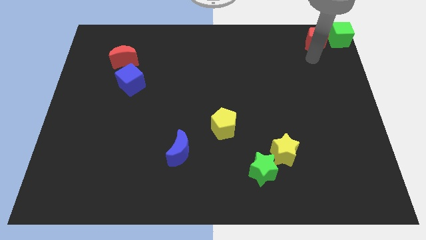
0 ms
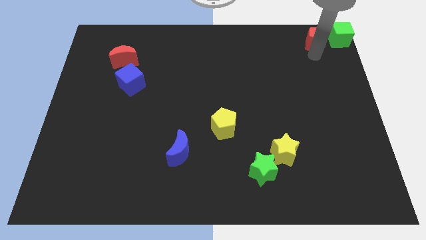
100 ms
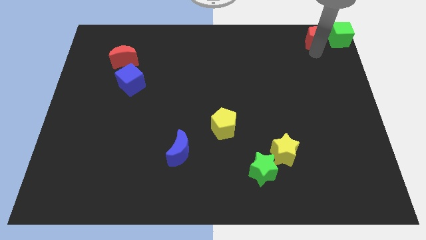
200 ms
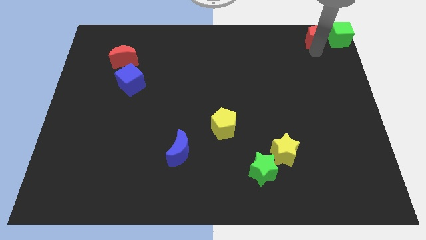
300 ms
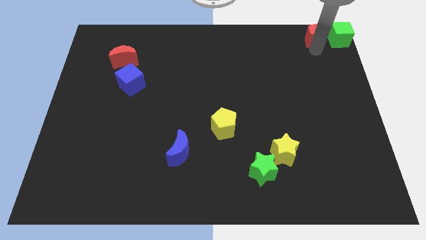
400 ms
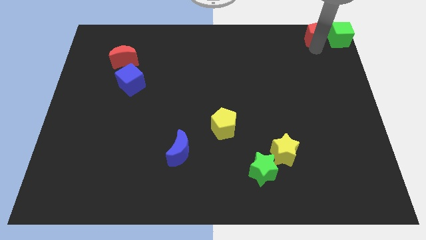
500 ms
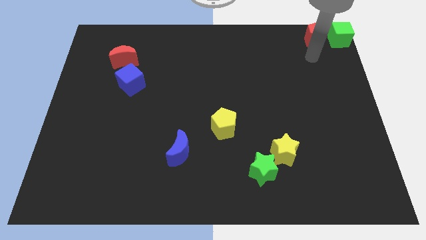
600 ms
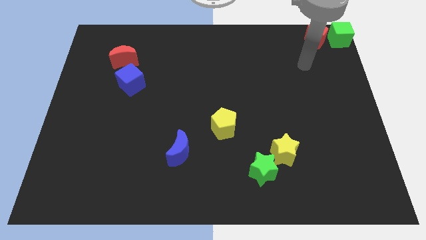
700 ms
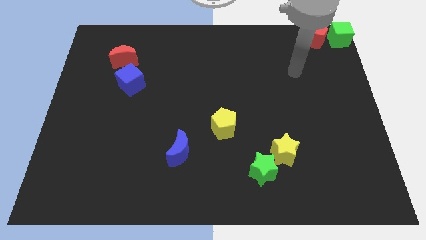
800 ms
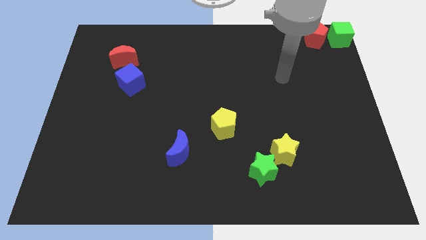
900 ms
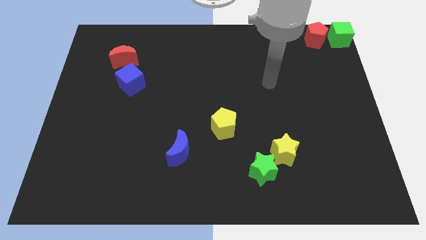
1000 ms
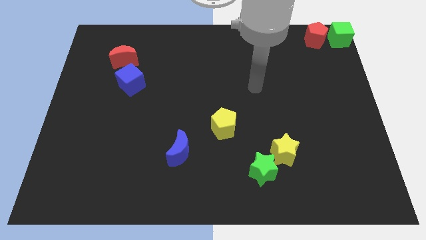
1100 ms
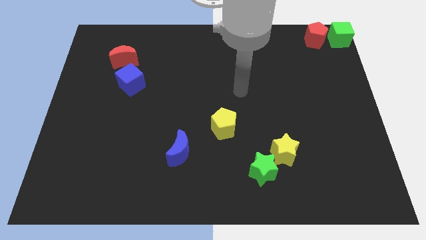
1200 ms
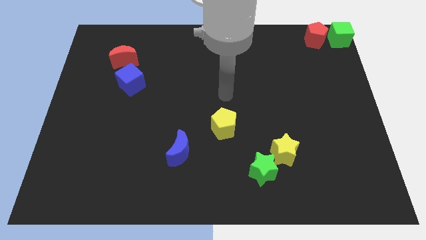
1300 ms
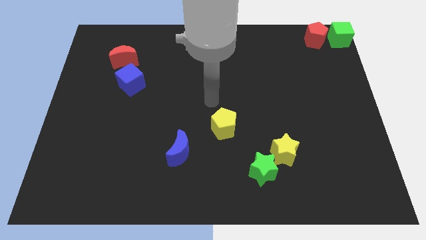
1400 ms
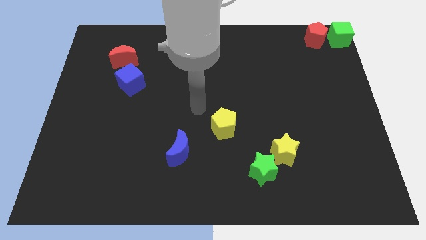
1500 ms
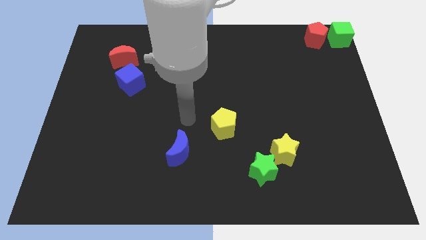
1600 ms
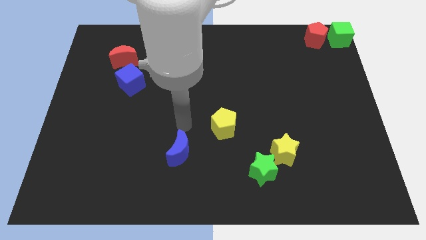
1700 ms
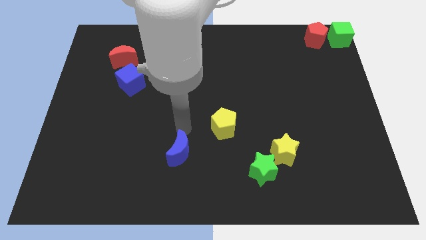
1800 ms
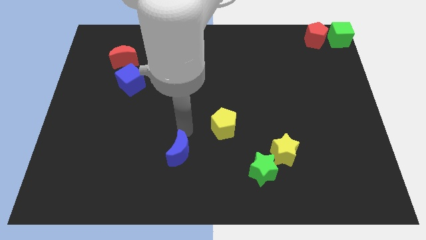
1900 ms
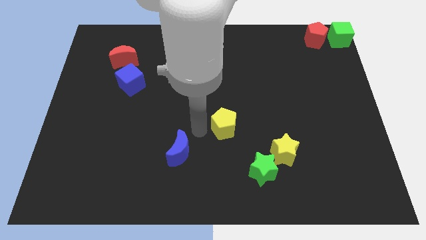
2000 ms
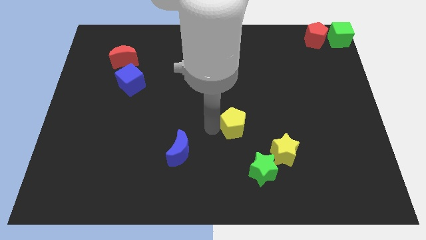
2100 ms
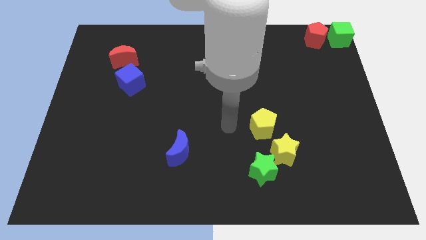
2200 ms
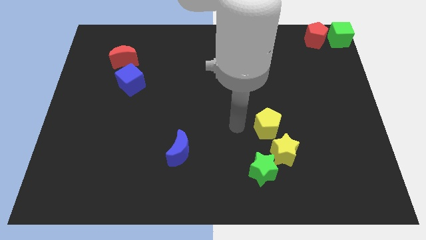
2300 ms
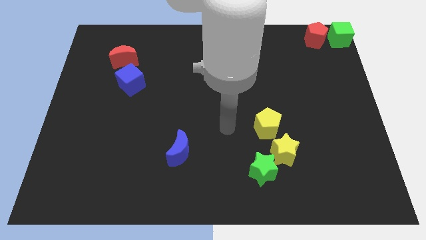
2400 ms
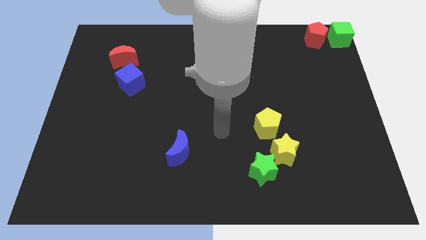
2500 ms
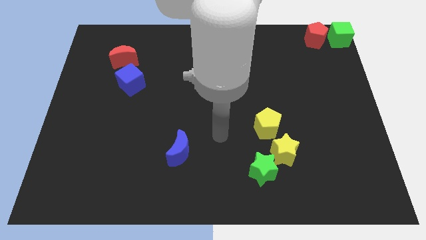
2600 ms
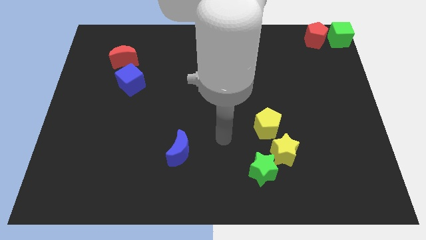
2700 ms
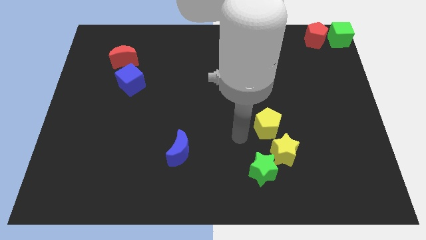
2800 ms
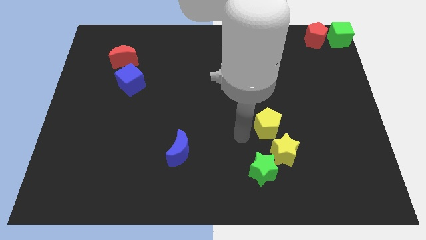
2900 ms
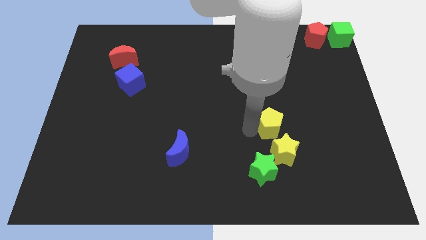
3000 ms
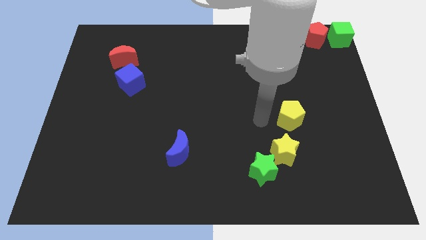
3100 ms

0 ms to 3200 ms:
place the yellow pentagon above the yellow star

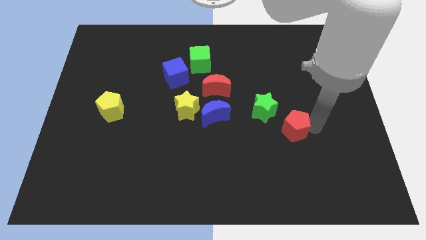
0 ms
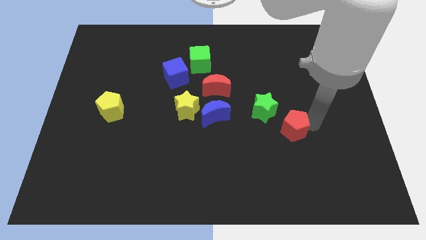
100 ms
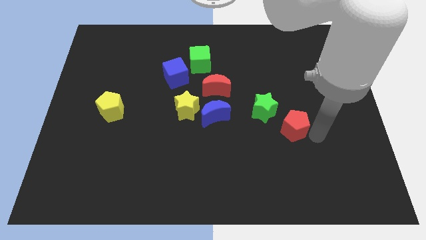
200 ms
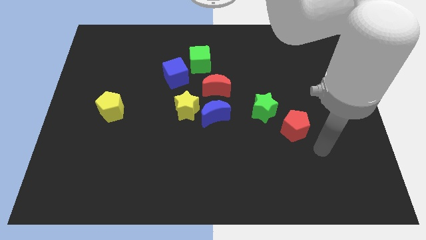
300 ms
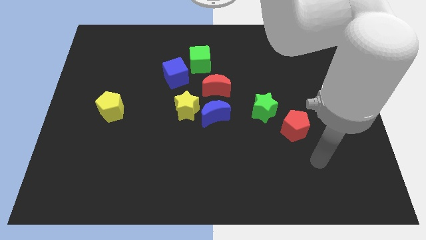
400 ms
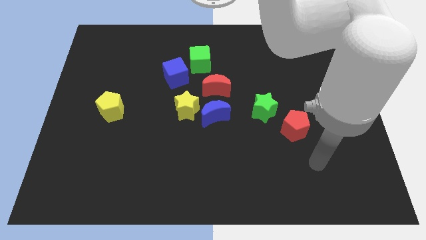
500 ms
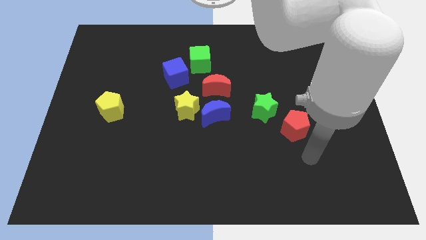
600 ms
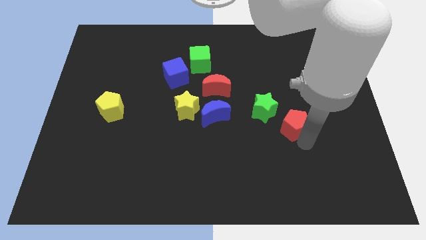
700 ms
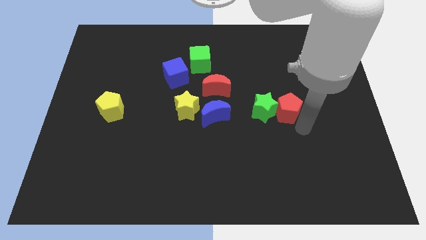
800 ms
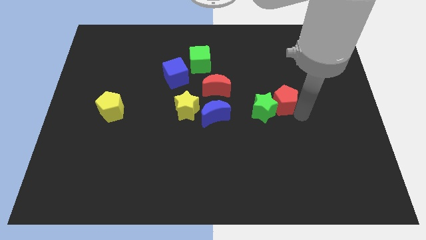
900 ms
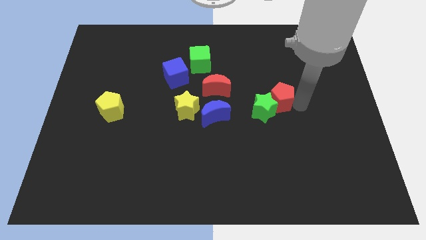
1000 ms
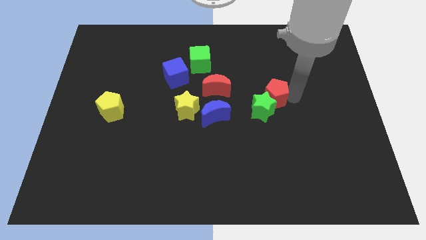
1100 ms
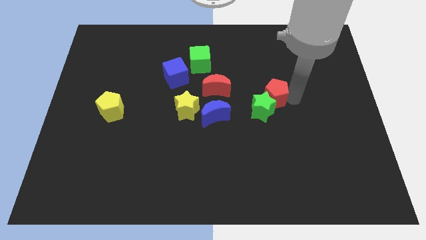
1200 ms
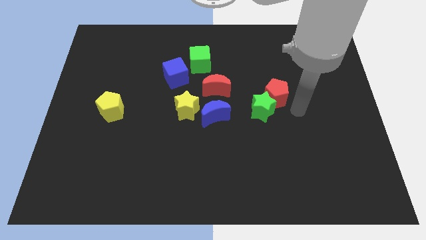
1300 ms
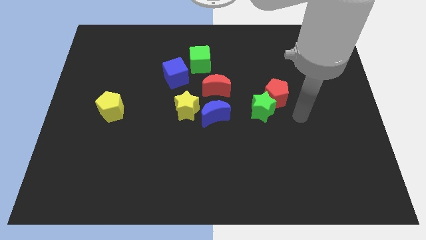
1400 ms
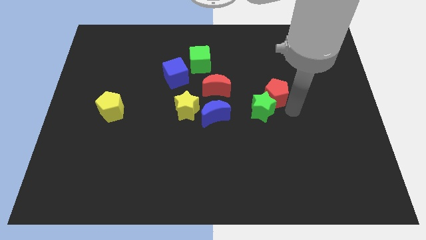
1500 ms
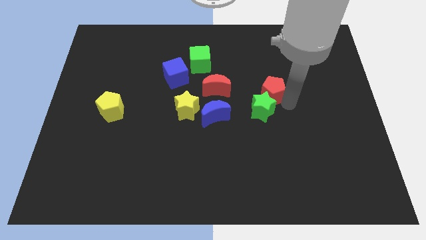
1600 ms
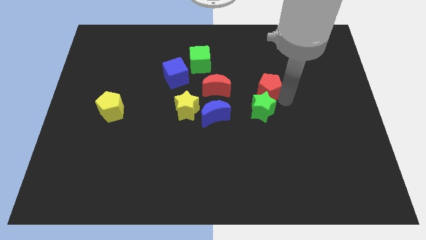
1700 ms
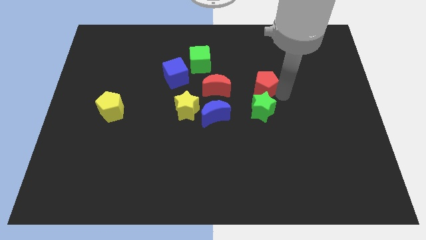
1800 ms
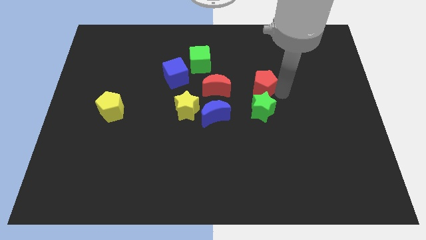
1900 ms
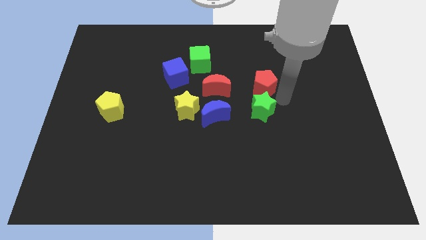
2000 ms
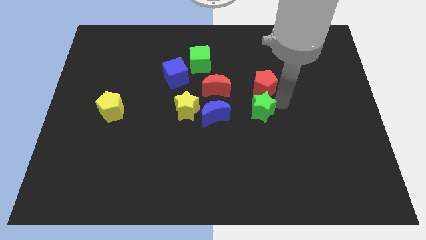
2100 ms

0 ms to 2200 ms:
push the red pentagon above the green star

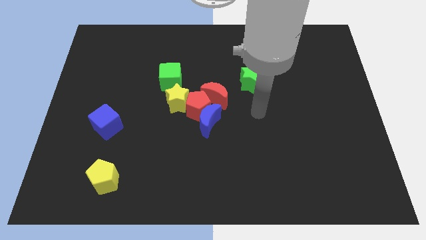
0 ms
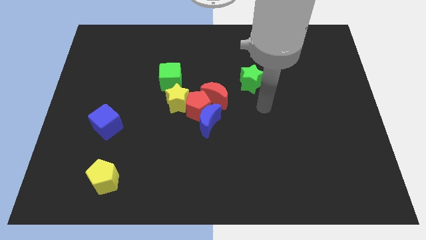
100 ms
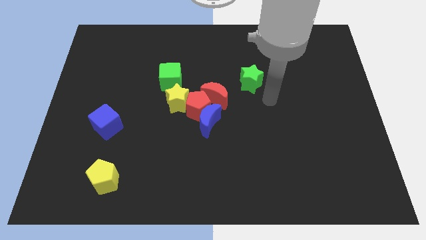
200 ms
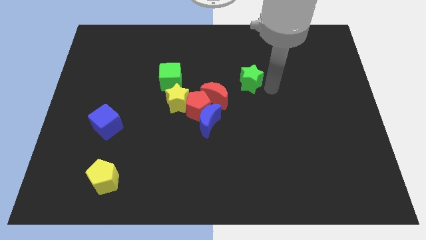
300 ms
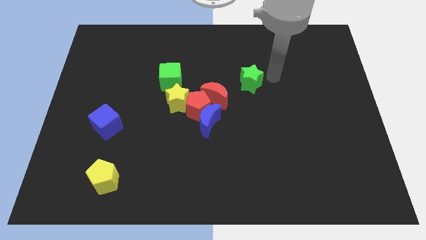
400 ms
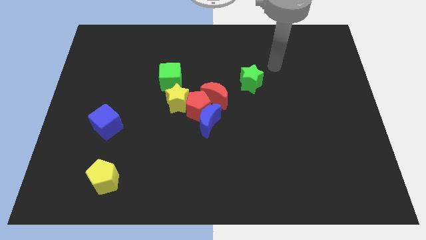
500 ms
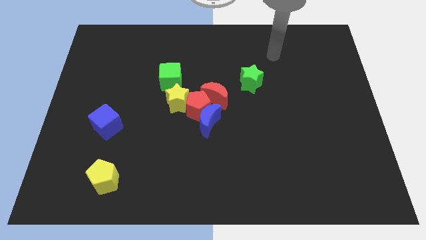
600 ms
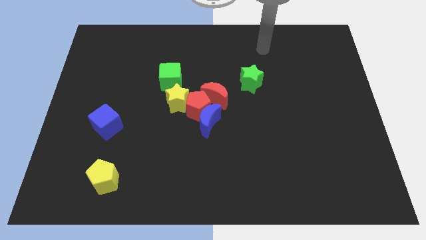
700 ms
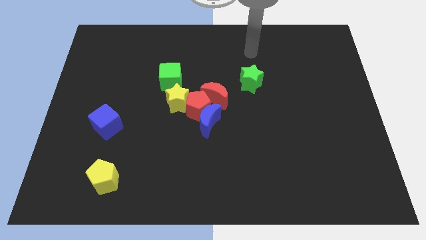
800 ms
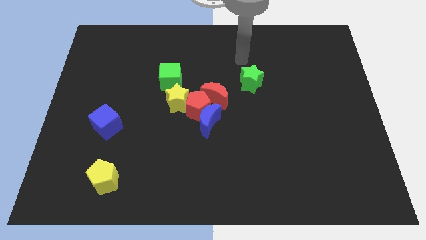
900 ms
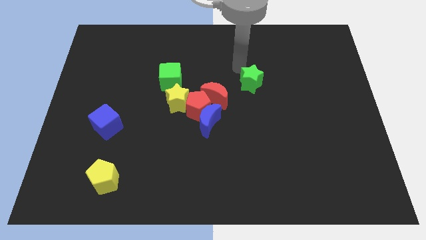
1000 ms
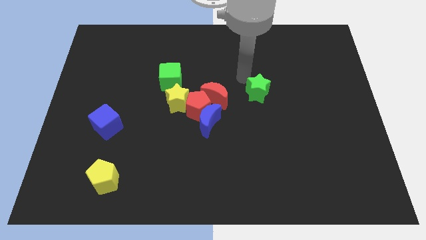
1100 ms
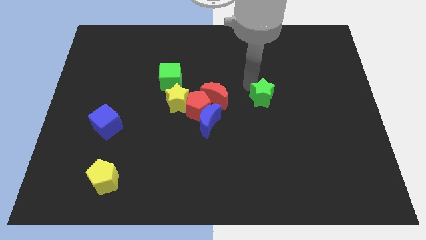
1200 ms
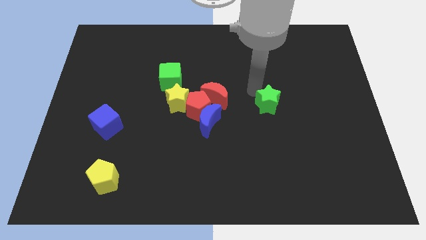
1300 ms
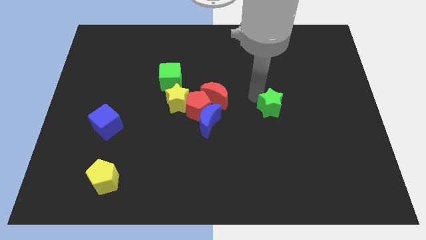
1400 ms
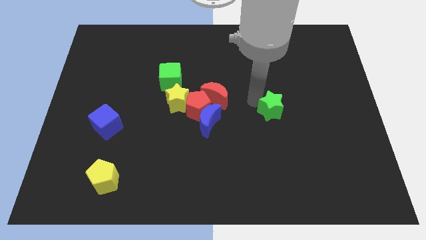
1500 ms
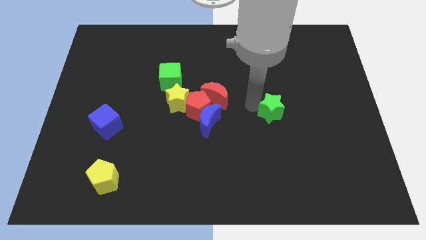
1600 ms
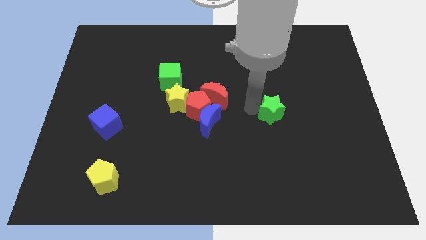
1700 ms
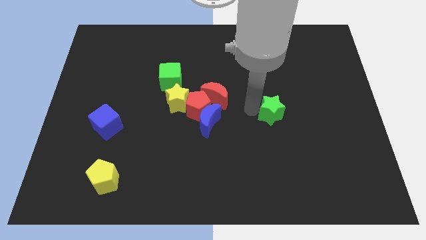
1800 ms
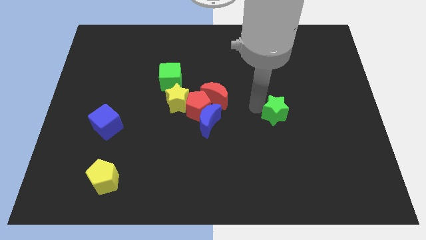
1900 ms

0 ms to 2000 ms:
drag green star towards middle of the board

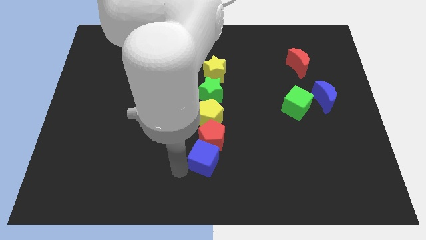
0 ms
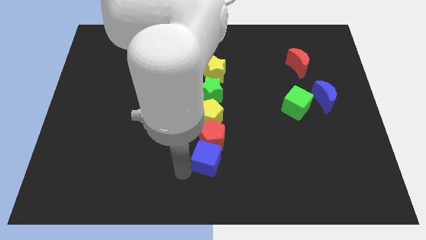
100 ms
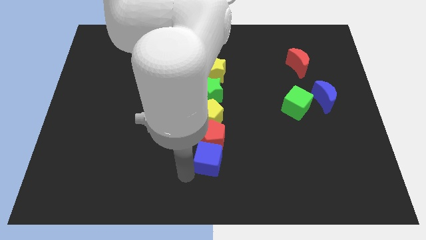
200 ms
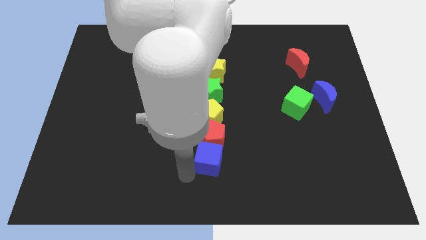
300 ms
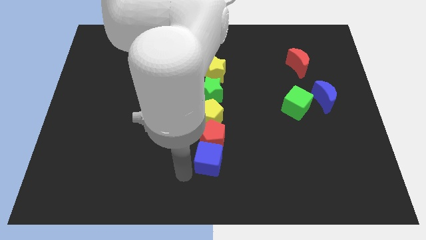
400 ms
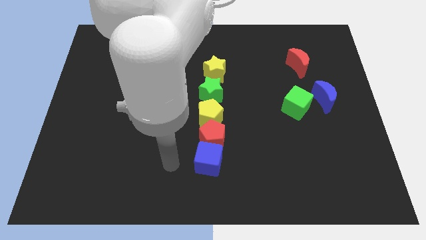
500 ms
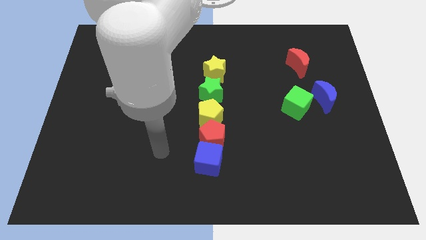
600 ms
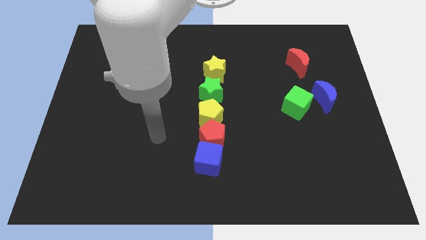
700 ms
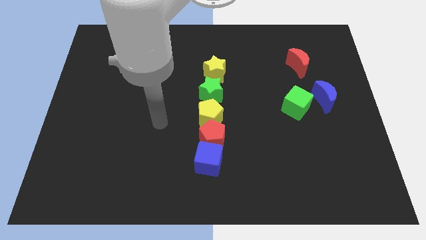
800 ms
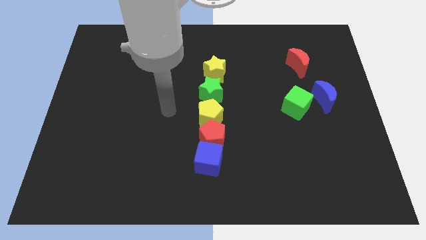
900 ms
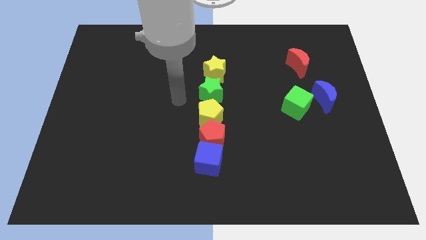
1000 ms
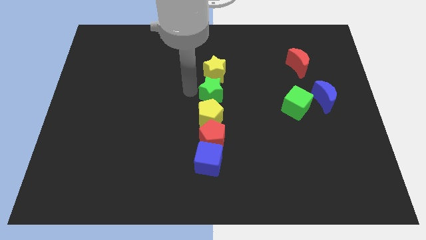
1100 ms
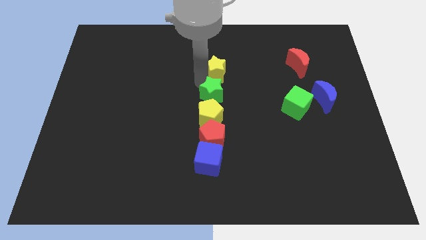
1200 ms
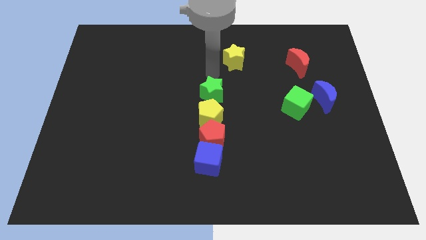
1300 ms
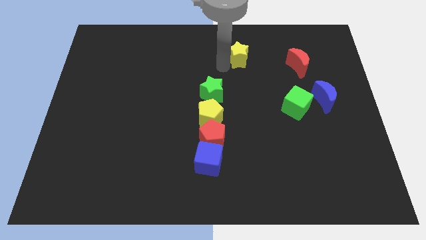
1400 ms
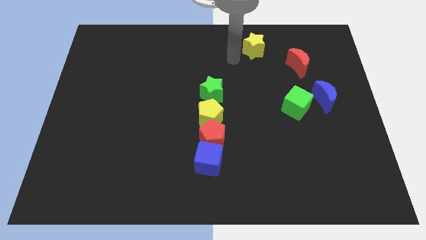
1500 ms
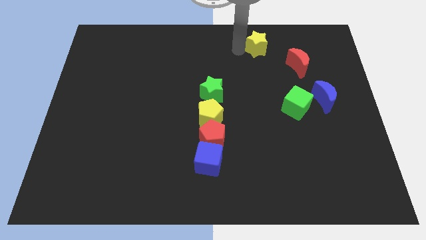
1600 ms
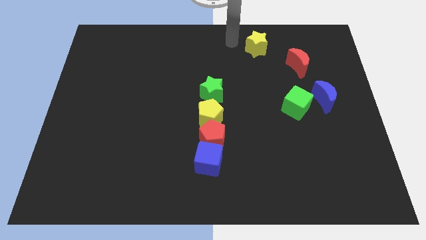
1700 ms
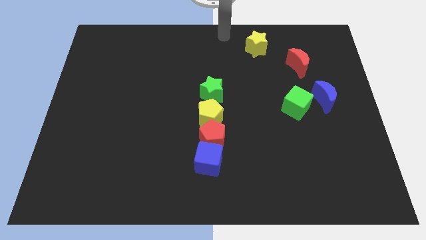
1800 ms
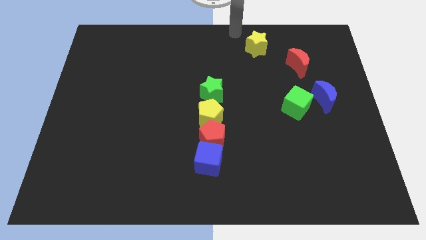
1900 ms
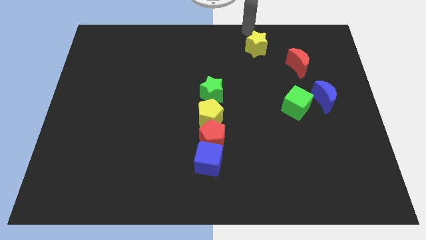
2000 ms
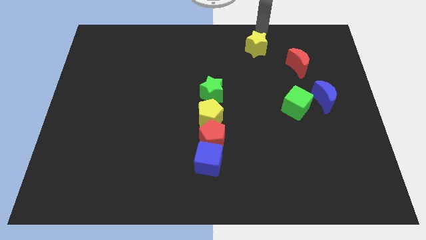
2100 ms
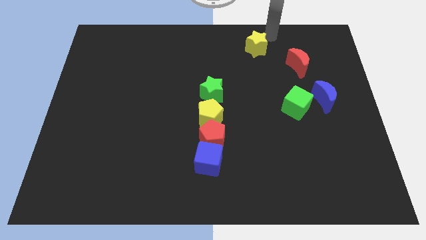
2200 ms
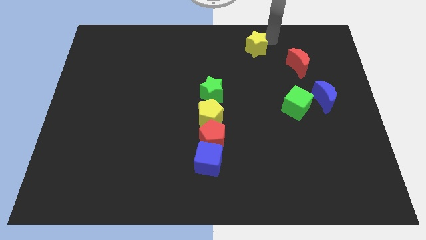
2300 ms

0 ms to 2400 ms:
push yellow star towards top of the board
